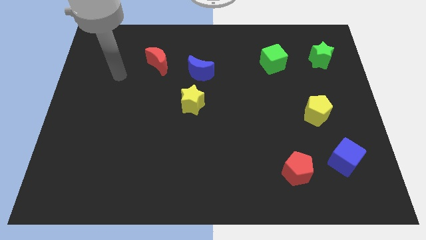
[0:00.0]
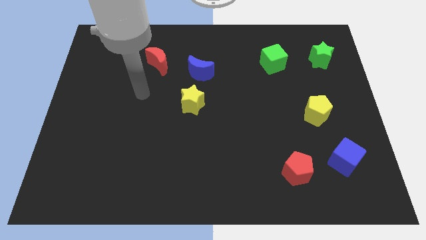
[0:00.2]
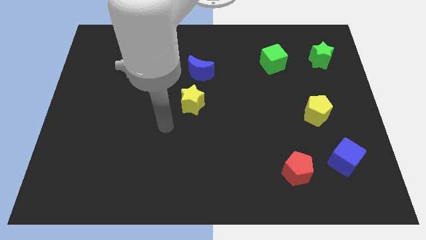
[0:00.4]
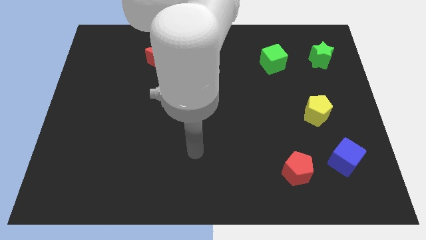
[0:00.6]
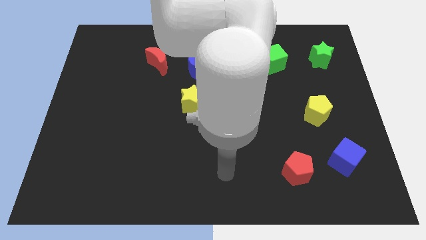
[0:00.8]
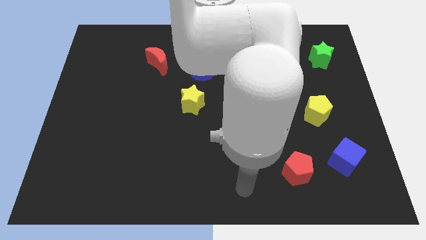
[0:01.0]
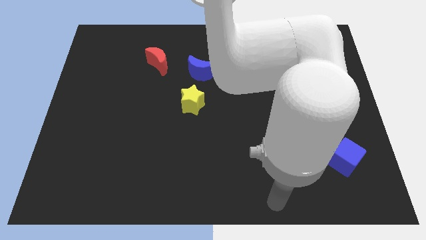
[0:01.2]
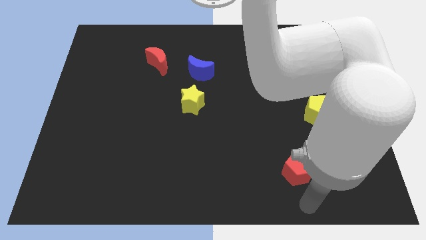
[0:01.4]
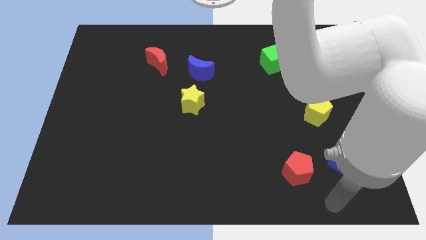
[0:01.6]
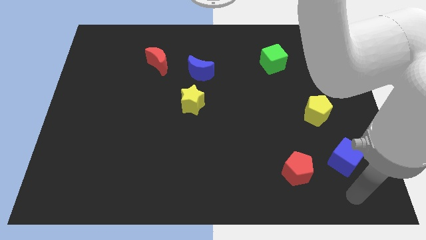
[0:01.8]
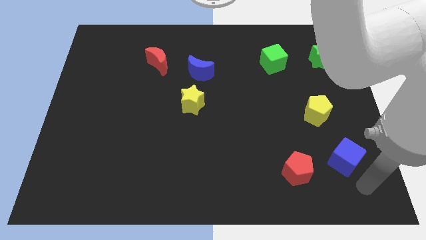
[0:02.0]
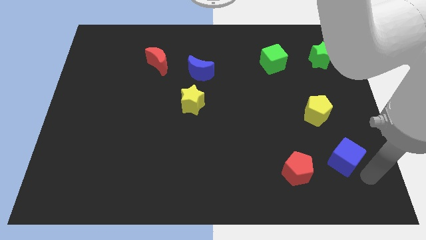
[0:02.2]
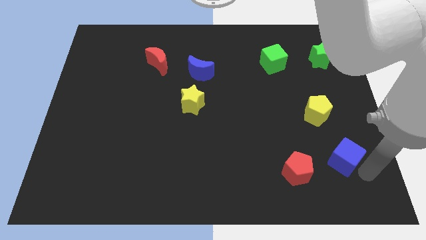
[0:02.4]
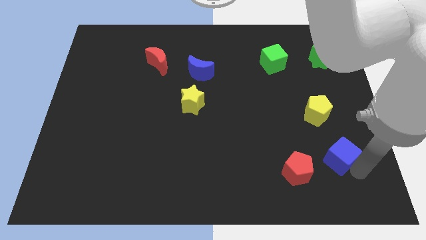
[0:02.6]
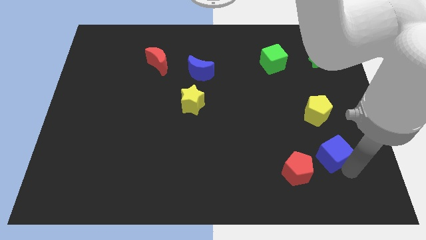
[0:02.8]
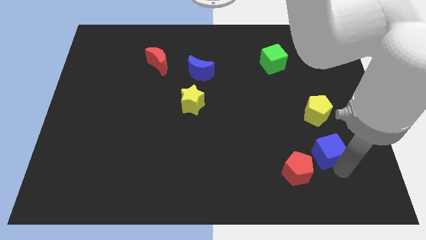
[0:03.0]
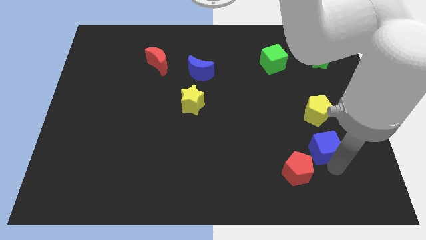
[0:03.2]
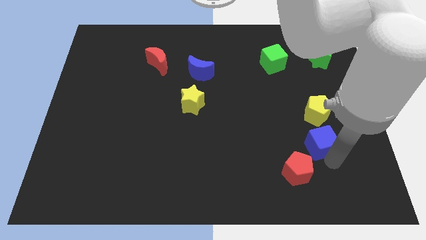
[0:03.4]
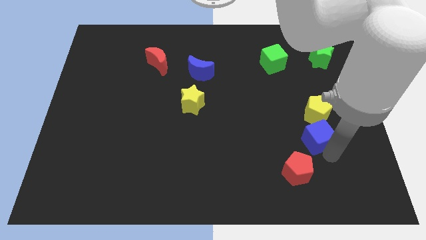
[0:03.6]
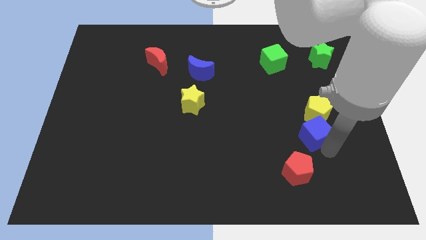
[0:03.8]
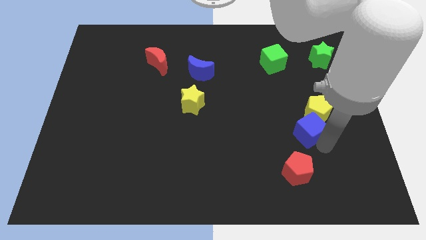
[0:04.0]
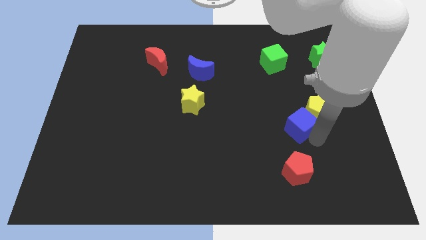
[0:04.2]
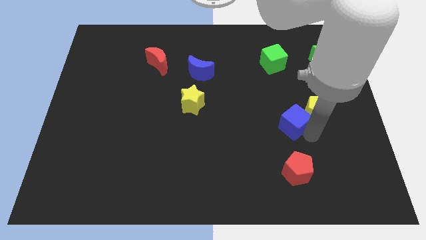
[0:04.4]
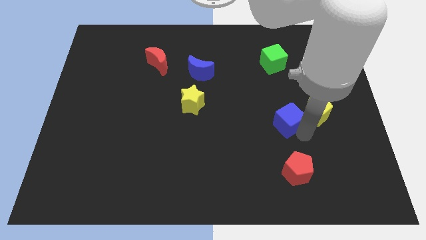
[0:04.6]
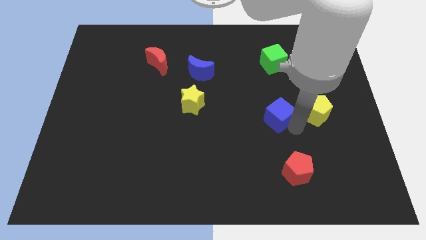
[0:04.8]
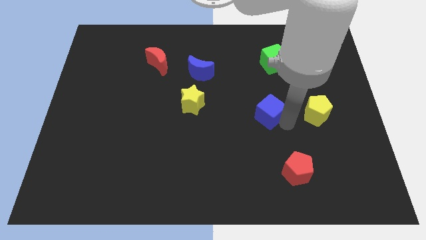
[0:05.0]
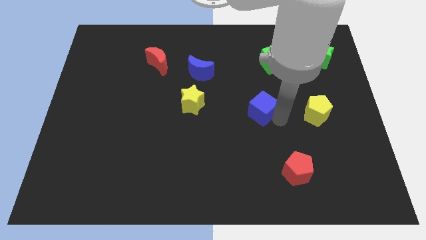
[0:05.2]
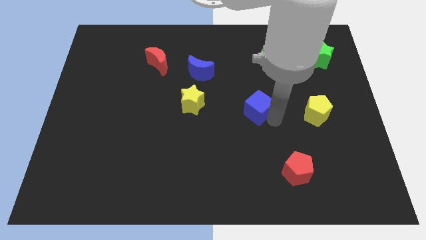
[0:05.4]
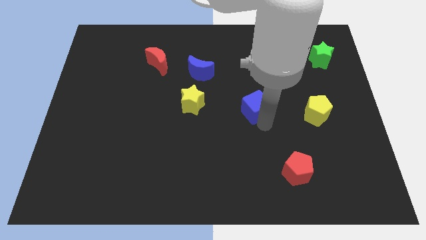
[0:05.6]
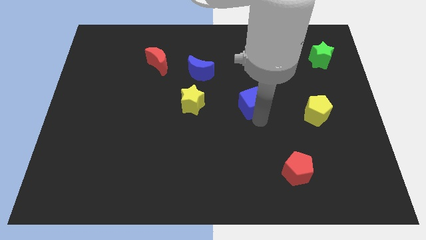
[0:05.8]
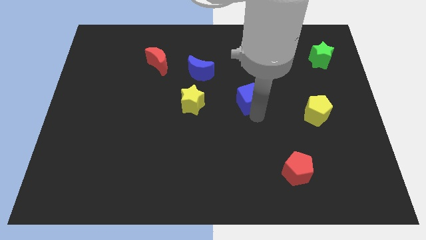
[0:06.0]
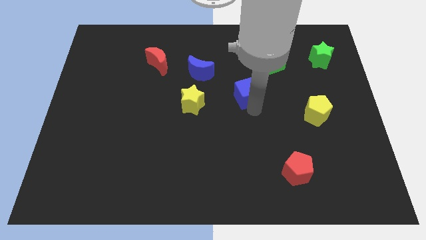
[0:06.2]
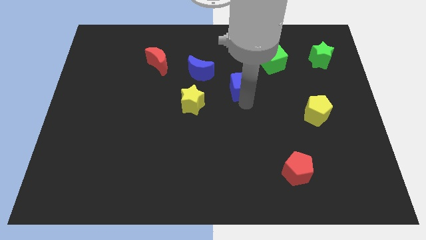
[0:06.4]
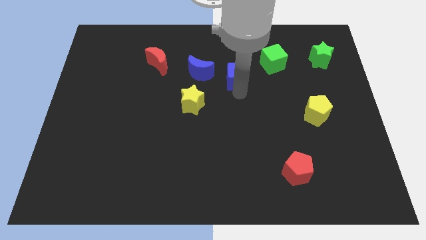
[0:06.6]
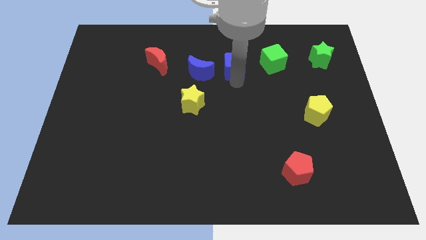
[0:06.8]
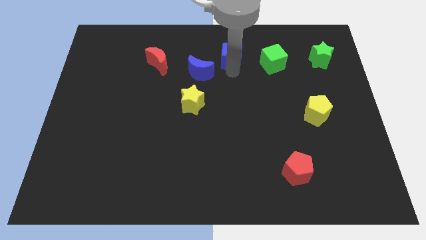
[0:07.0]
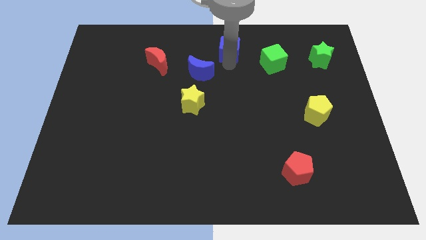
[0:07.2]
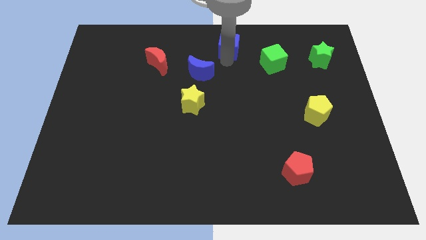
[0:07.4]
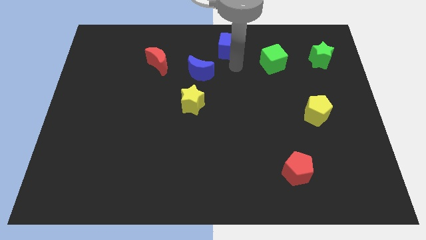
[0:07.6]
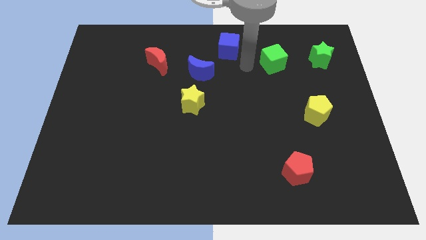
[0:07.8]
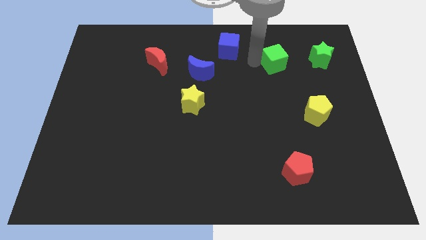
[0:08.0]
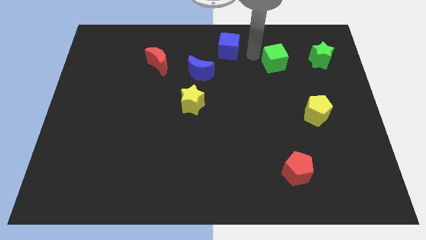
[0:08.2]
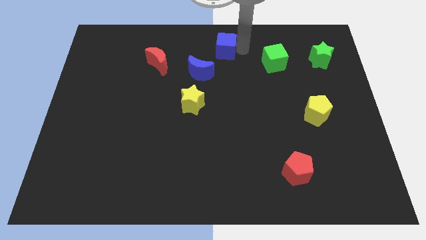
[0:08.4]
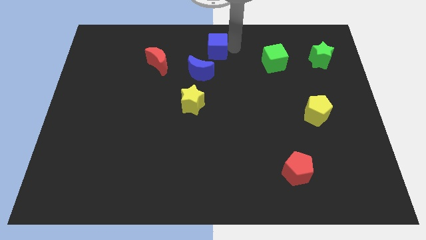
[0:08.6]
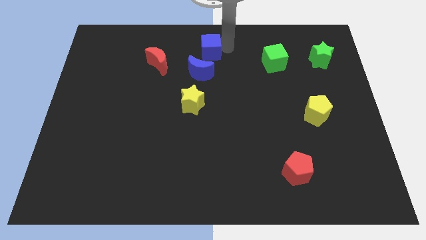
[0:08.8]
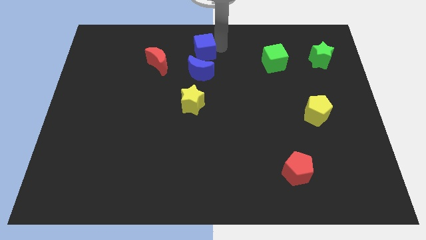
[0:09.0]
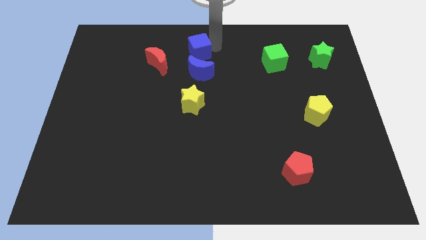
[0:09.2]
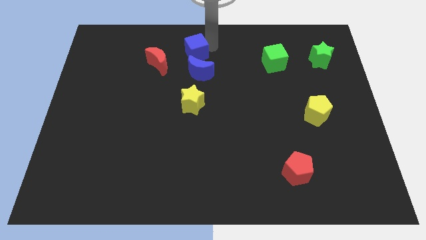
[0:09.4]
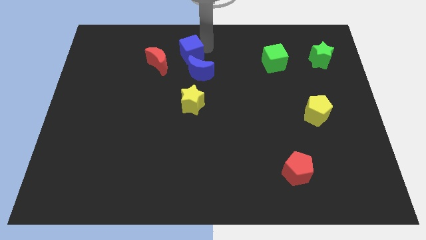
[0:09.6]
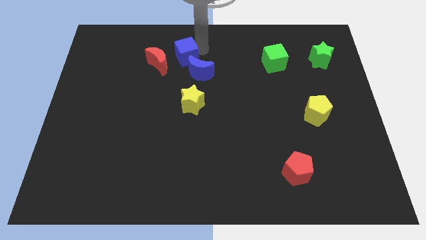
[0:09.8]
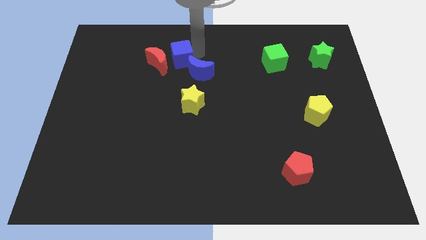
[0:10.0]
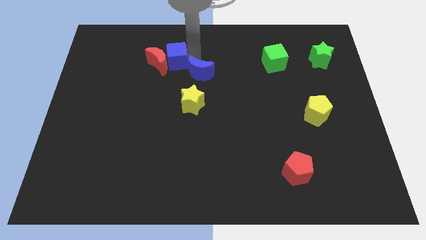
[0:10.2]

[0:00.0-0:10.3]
slide the blue cube to the red moon

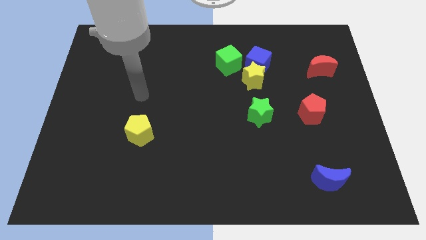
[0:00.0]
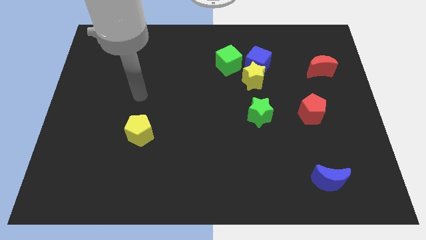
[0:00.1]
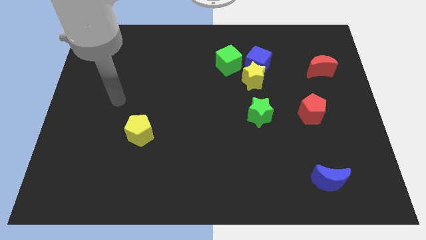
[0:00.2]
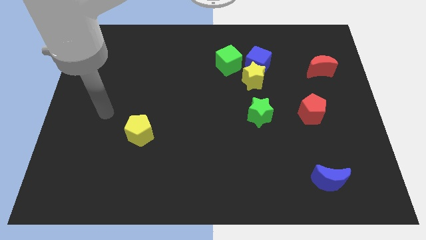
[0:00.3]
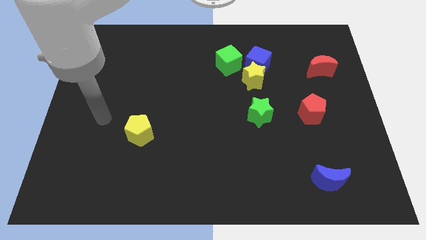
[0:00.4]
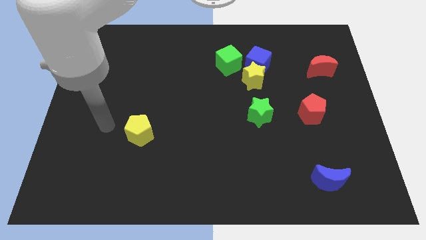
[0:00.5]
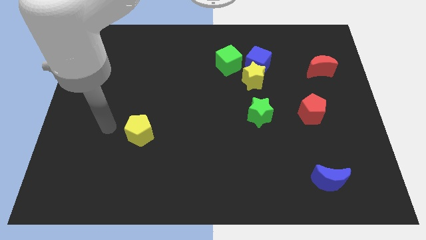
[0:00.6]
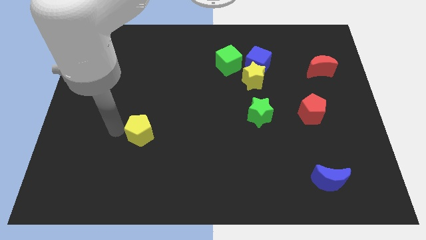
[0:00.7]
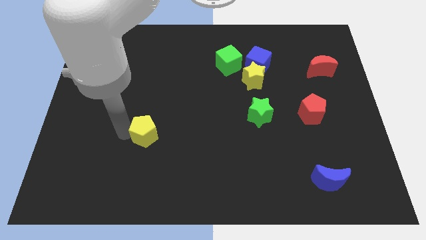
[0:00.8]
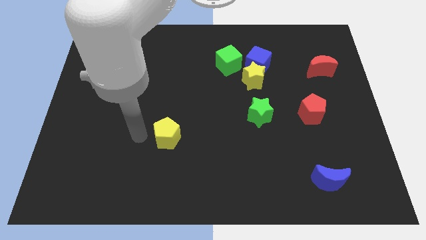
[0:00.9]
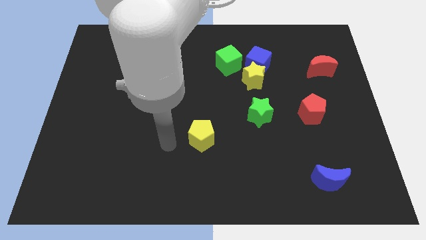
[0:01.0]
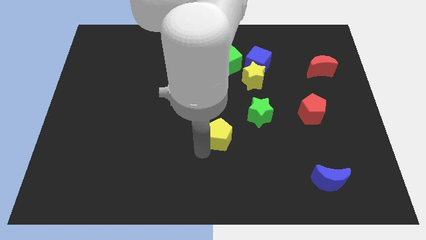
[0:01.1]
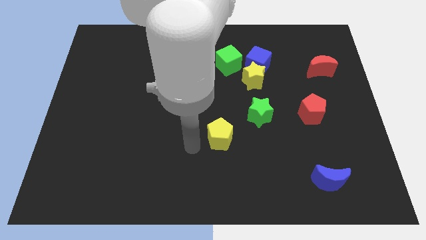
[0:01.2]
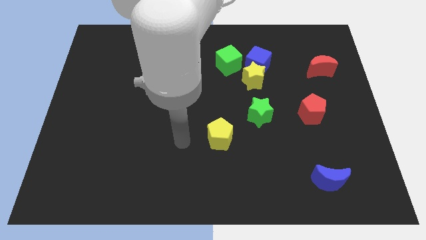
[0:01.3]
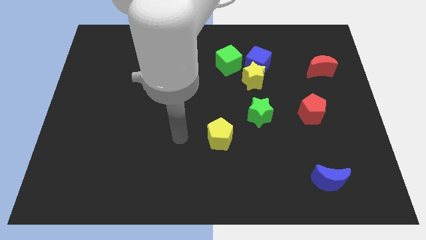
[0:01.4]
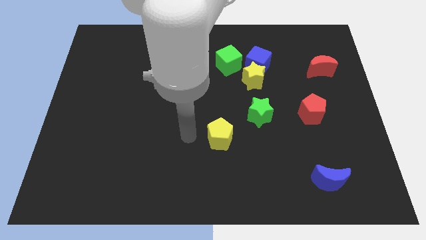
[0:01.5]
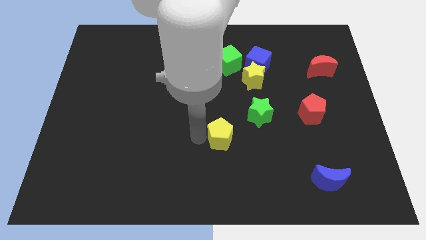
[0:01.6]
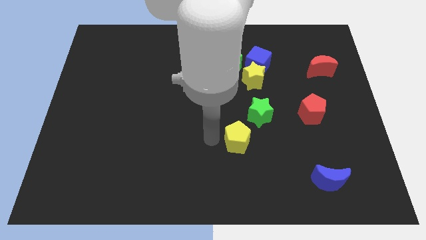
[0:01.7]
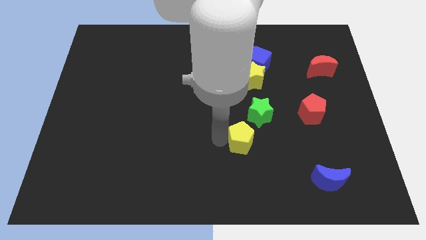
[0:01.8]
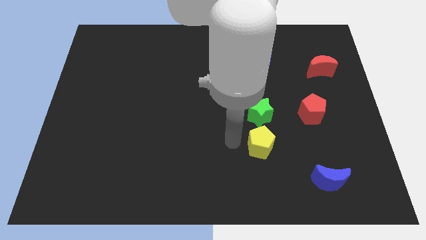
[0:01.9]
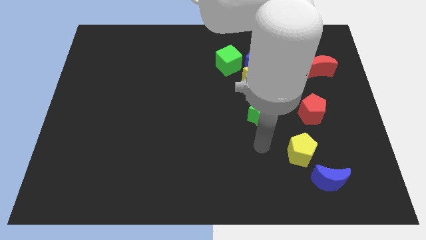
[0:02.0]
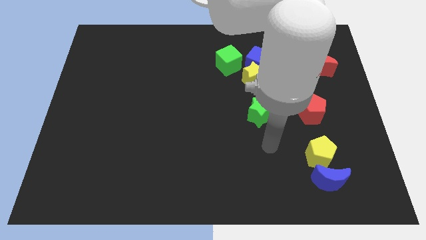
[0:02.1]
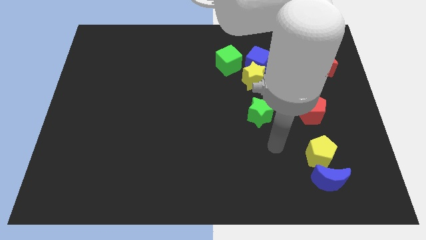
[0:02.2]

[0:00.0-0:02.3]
push the yellow pentagon towards the blue moon

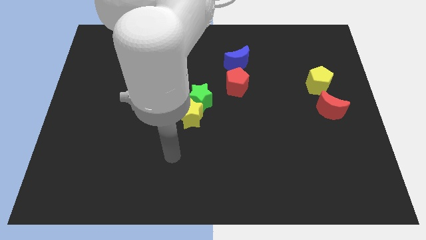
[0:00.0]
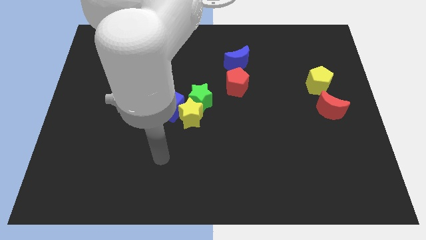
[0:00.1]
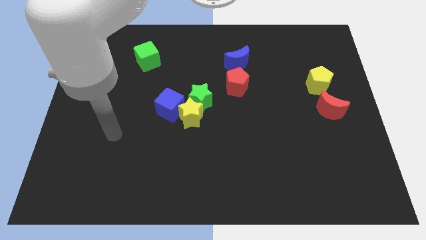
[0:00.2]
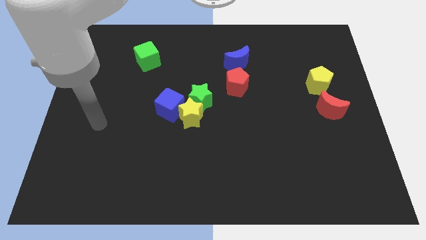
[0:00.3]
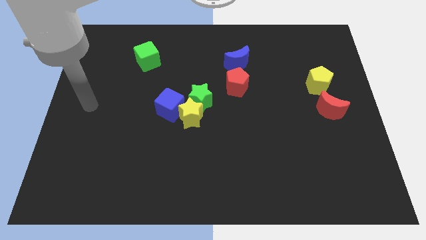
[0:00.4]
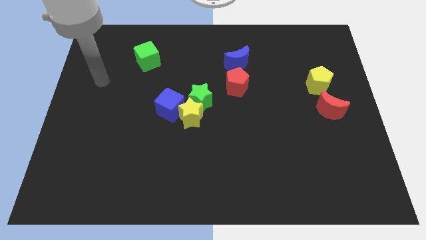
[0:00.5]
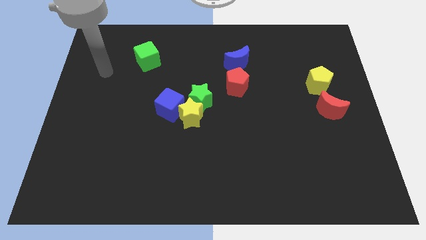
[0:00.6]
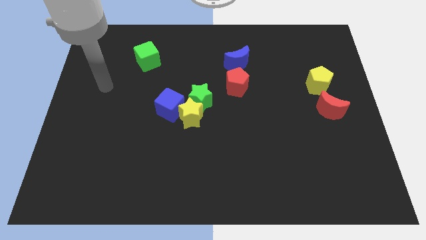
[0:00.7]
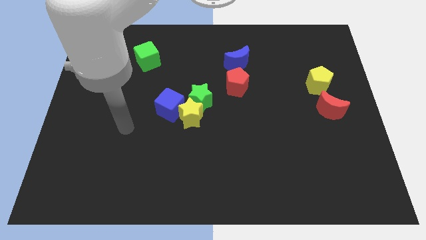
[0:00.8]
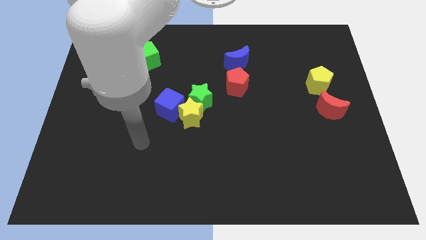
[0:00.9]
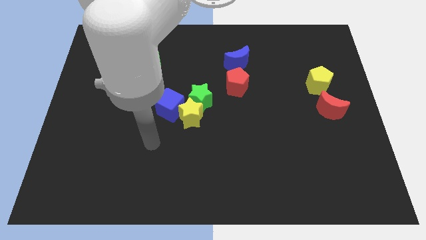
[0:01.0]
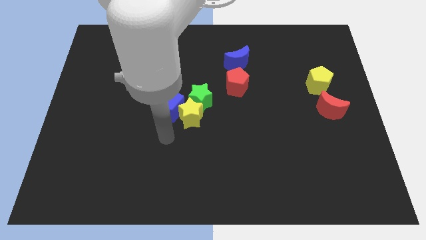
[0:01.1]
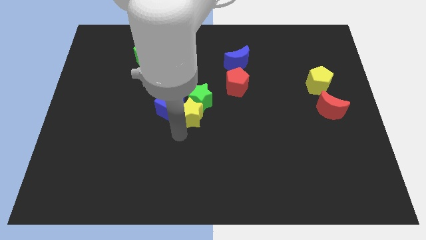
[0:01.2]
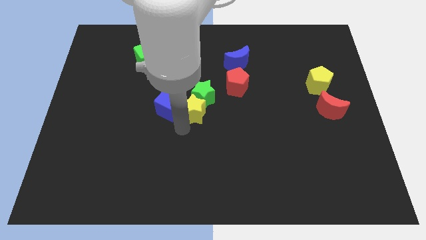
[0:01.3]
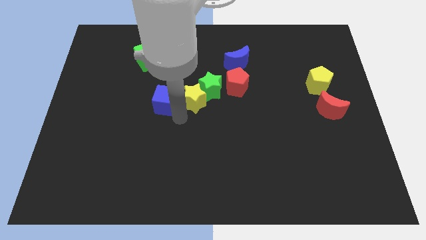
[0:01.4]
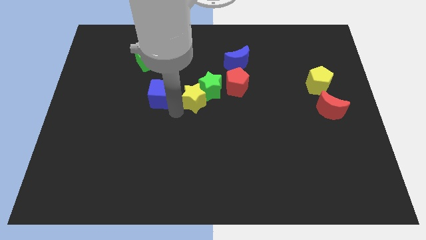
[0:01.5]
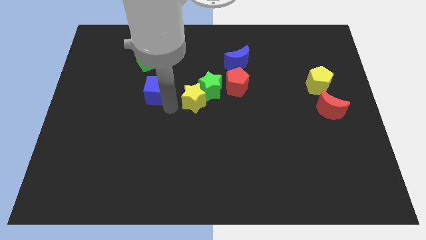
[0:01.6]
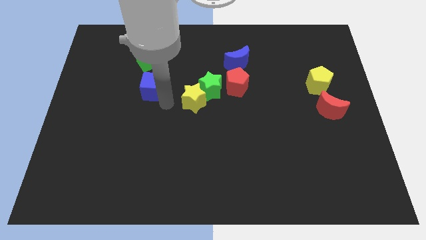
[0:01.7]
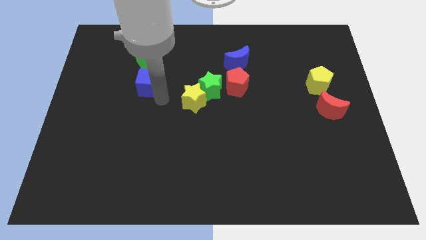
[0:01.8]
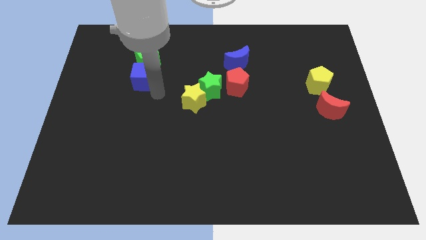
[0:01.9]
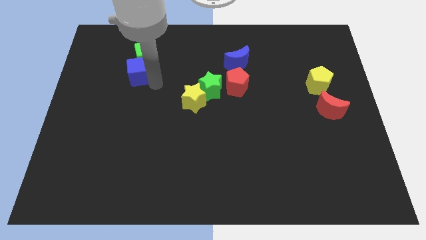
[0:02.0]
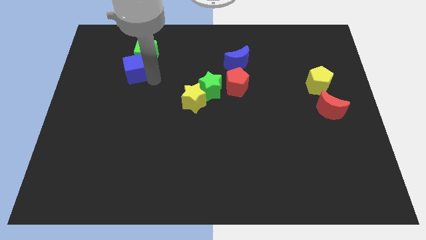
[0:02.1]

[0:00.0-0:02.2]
put the blue cube close to the green cube
